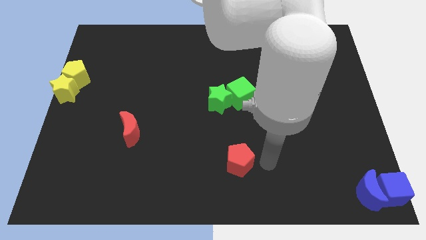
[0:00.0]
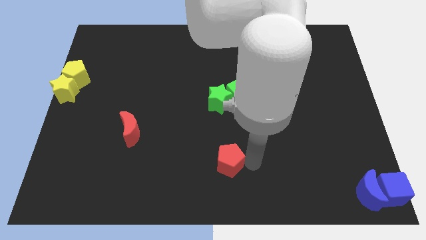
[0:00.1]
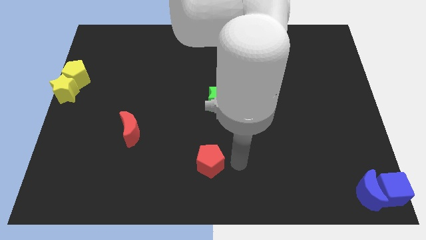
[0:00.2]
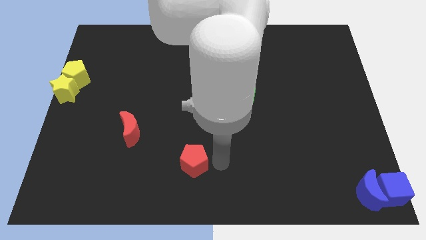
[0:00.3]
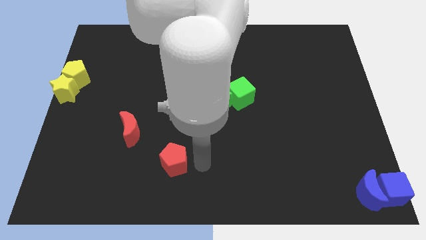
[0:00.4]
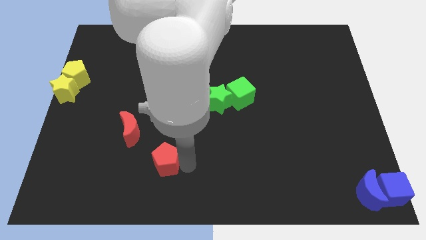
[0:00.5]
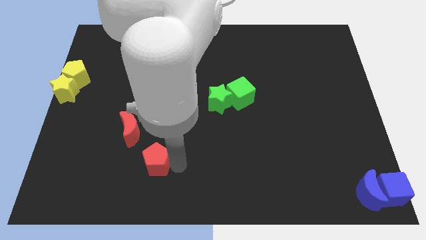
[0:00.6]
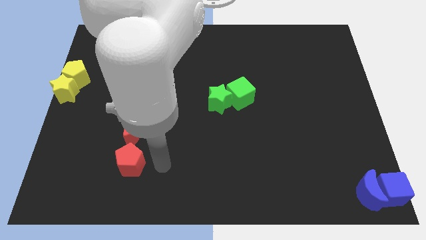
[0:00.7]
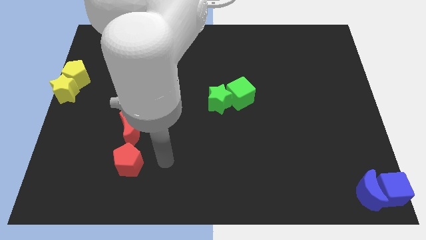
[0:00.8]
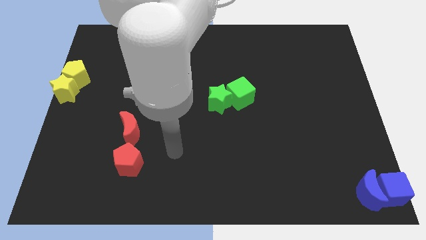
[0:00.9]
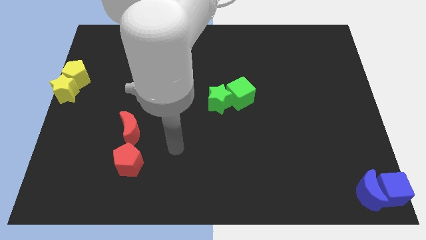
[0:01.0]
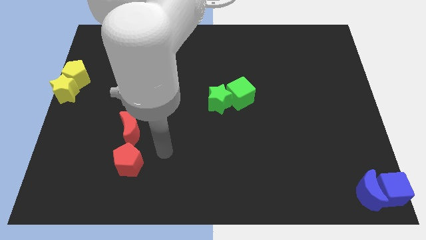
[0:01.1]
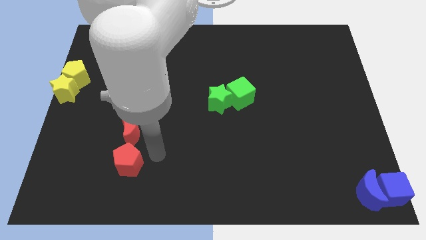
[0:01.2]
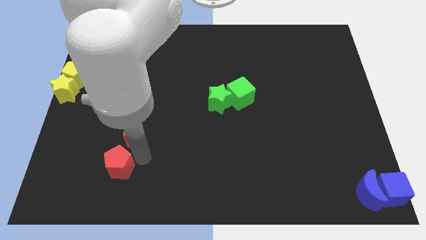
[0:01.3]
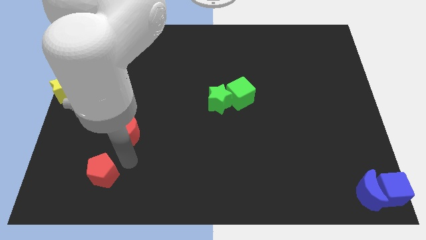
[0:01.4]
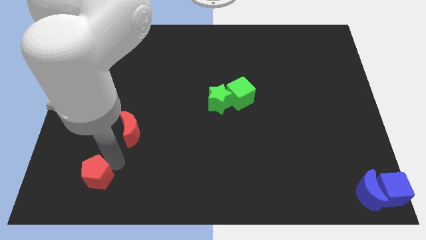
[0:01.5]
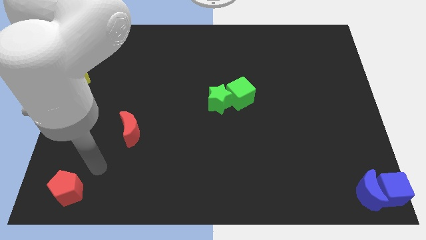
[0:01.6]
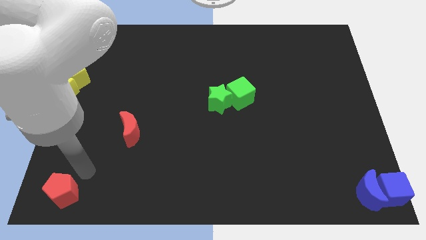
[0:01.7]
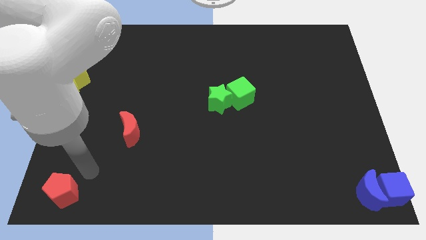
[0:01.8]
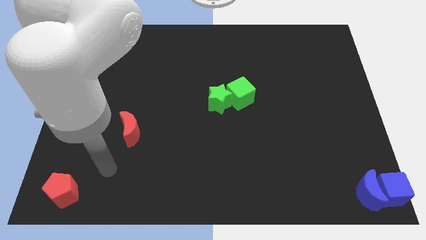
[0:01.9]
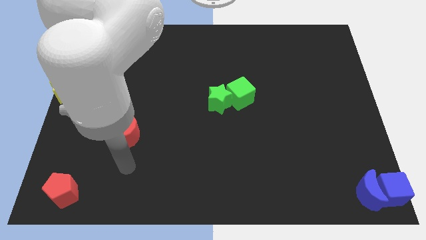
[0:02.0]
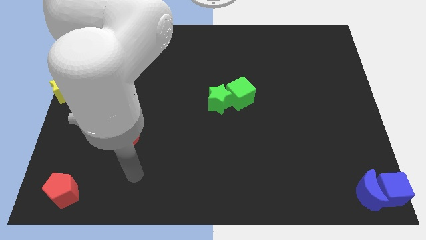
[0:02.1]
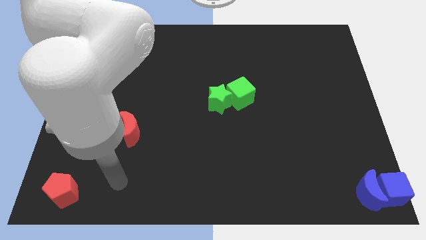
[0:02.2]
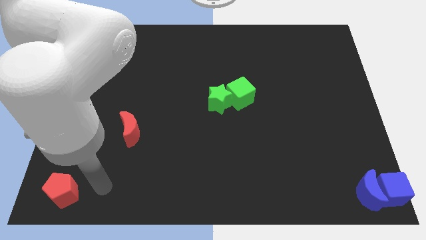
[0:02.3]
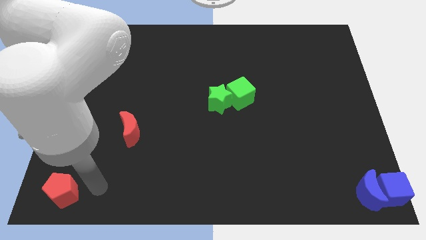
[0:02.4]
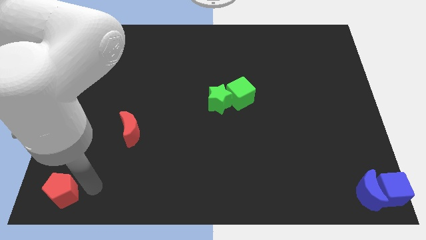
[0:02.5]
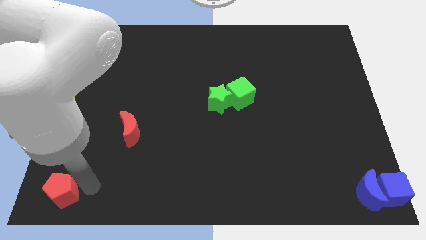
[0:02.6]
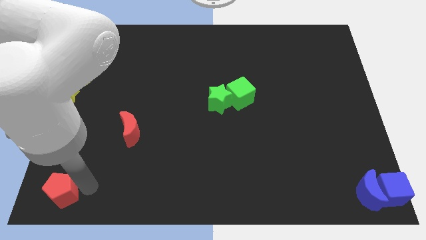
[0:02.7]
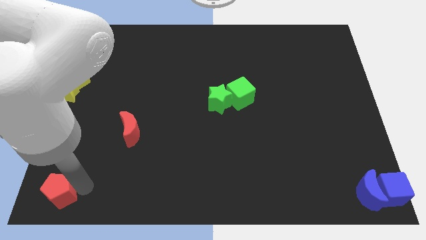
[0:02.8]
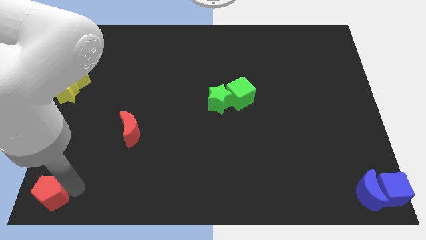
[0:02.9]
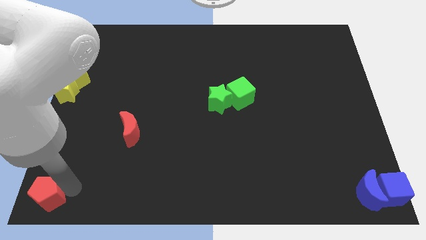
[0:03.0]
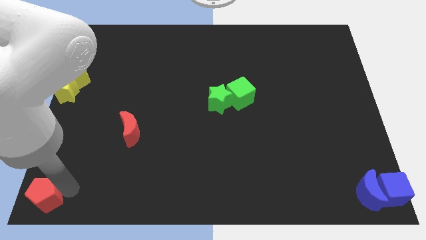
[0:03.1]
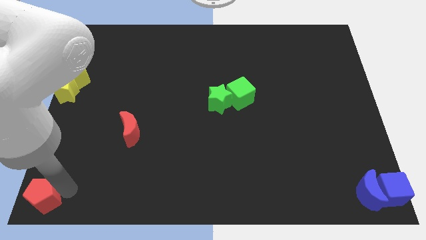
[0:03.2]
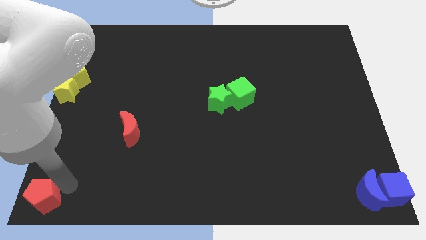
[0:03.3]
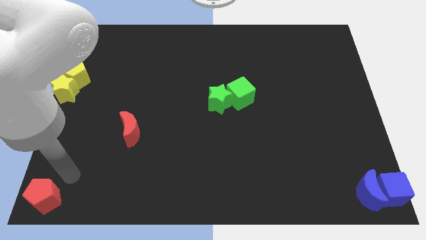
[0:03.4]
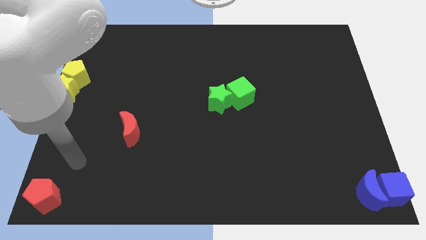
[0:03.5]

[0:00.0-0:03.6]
push the red pentagon to the bottom left side

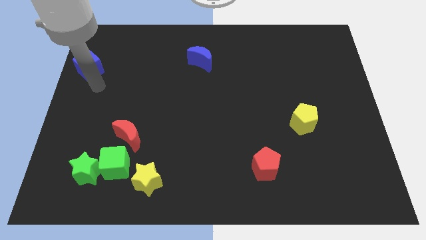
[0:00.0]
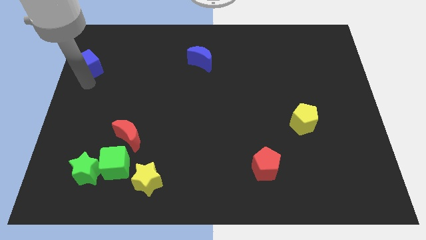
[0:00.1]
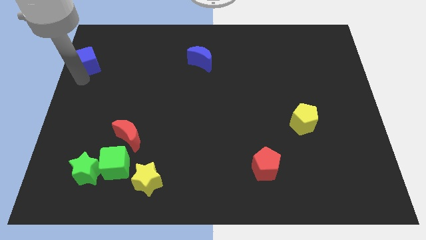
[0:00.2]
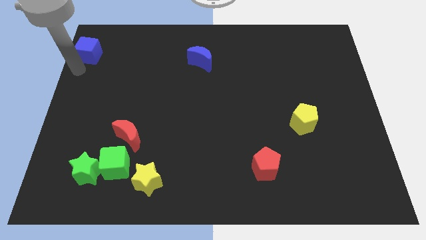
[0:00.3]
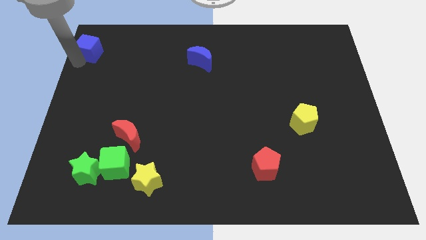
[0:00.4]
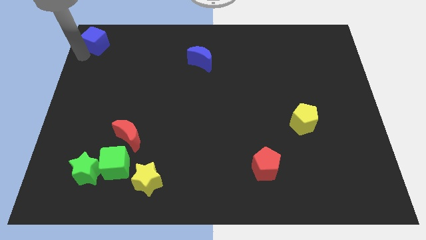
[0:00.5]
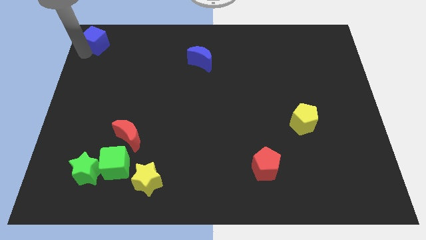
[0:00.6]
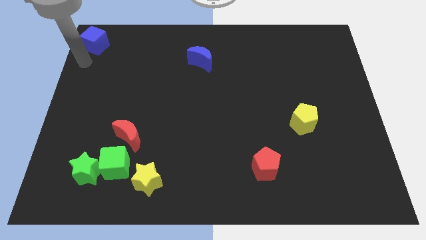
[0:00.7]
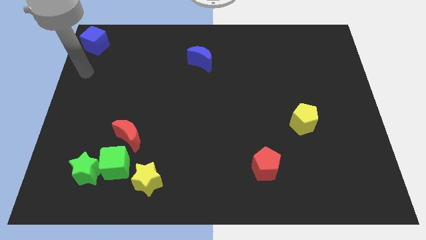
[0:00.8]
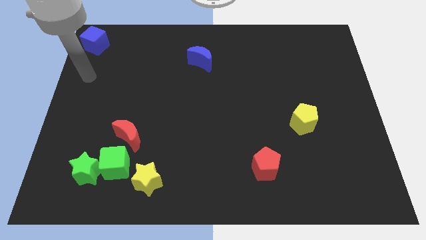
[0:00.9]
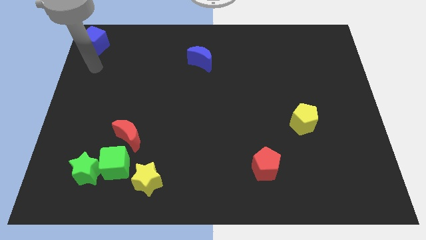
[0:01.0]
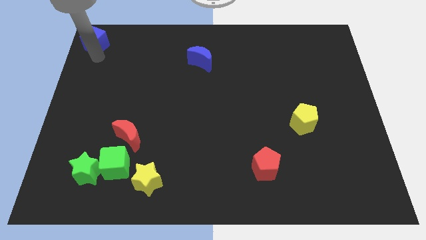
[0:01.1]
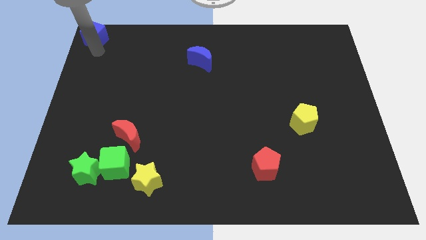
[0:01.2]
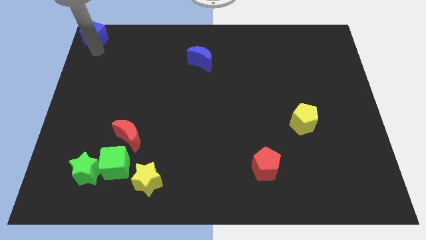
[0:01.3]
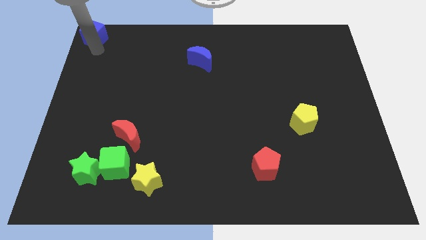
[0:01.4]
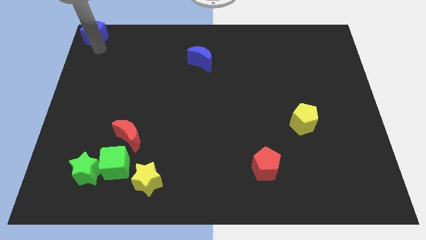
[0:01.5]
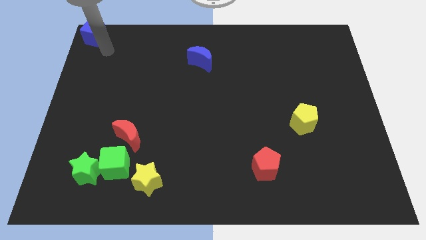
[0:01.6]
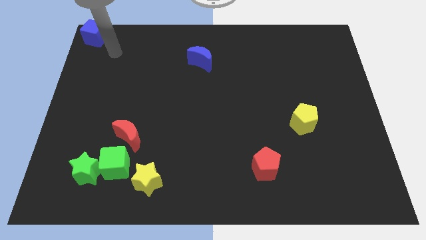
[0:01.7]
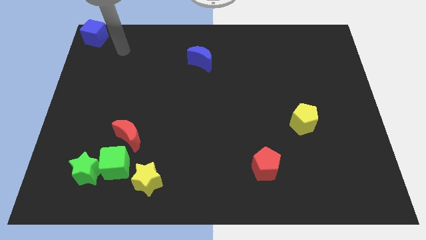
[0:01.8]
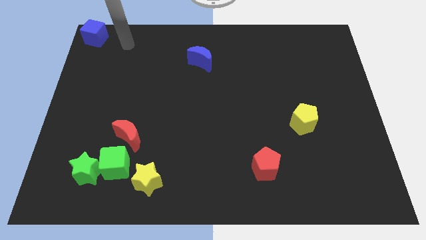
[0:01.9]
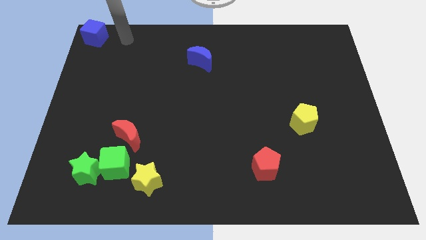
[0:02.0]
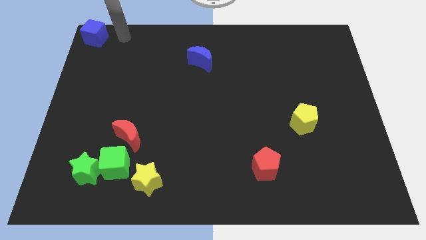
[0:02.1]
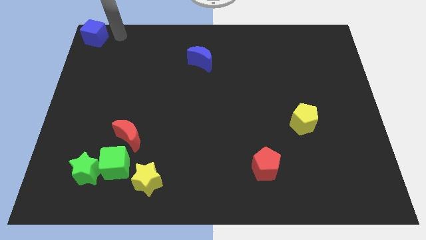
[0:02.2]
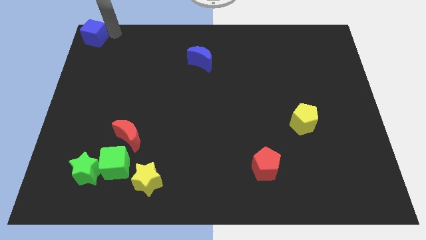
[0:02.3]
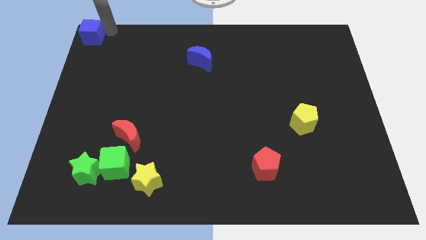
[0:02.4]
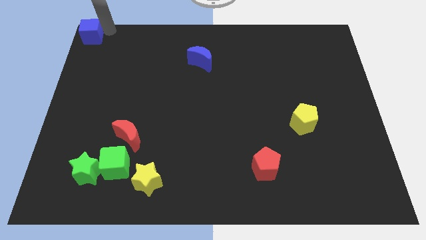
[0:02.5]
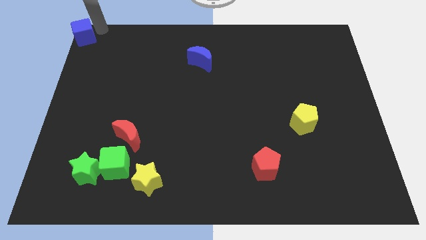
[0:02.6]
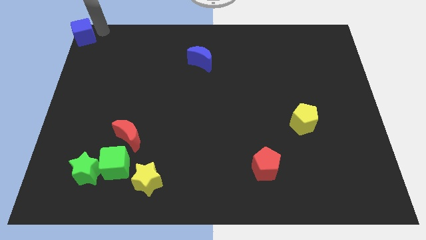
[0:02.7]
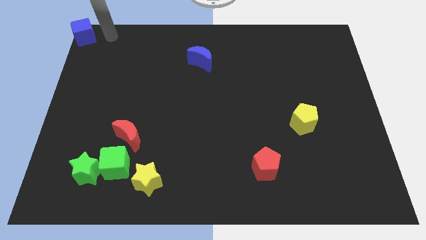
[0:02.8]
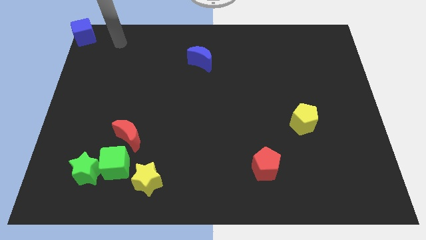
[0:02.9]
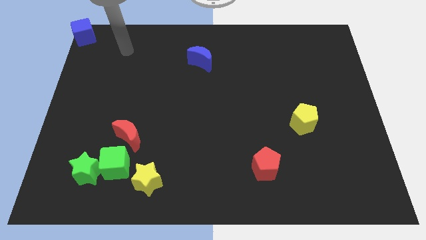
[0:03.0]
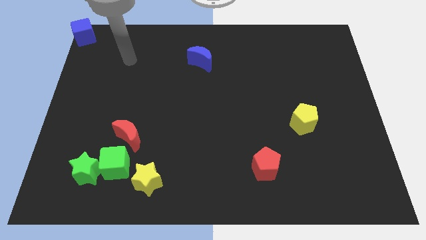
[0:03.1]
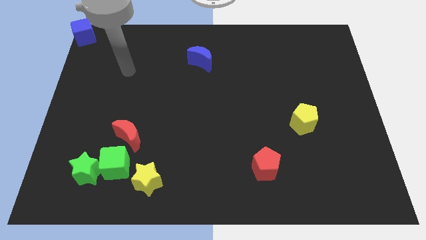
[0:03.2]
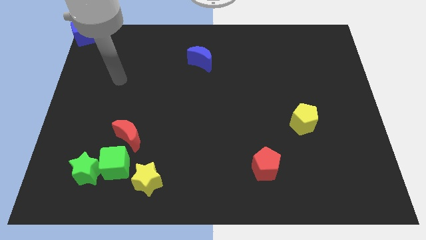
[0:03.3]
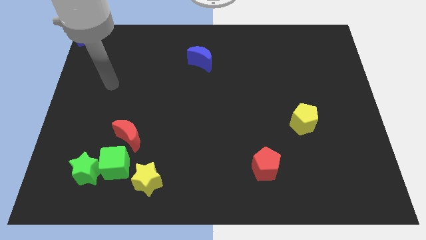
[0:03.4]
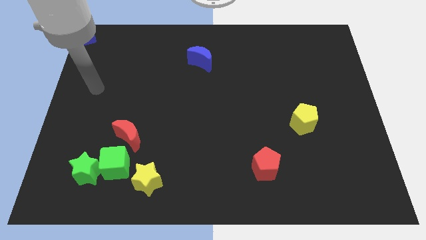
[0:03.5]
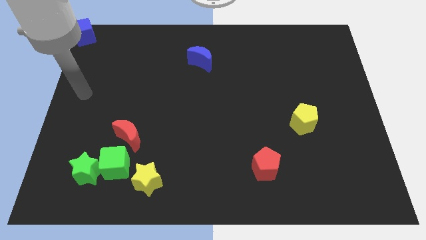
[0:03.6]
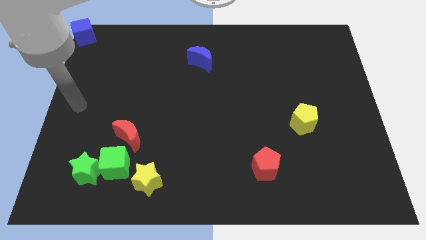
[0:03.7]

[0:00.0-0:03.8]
move the blue cube to the top left corner of the board

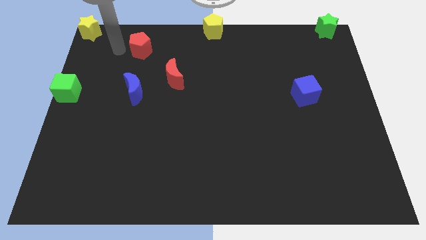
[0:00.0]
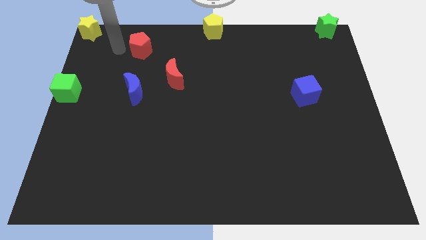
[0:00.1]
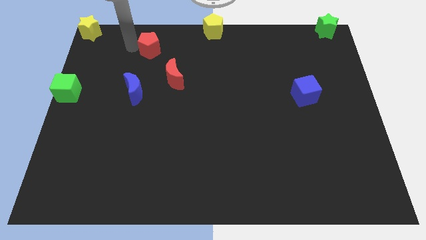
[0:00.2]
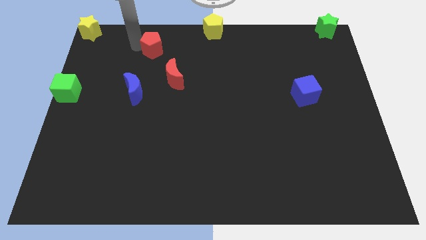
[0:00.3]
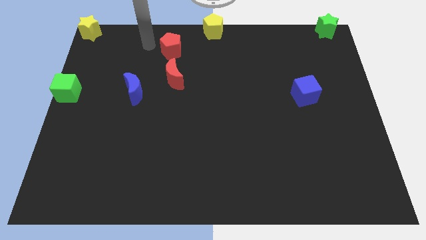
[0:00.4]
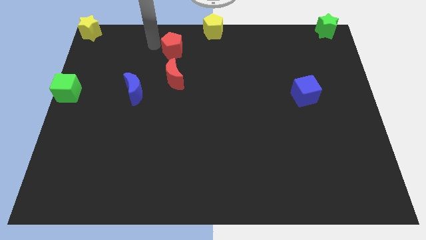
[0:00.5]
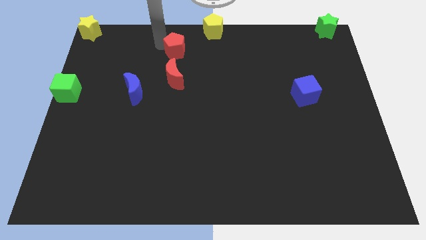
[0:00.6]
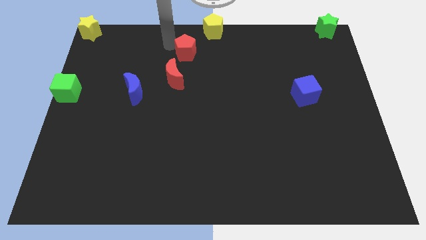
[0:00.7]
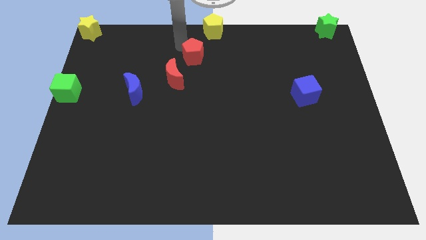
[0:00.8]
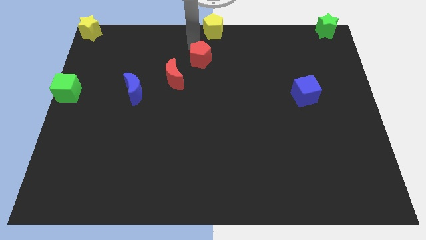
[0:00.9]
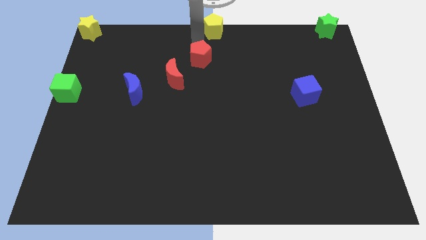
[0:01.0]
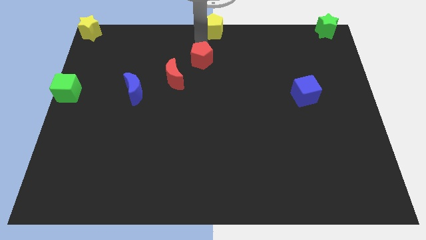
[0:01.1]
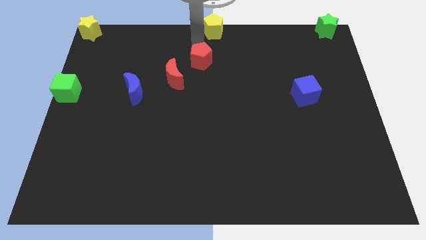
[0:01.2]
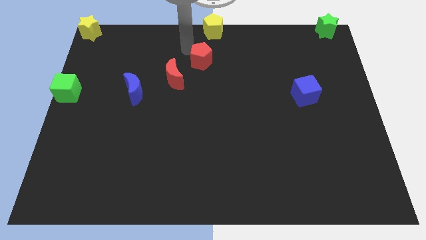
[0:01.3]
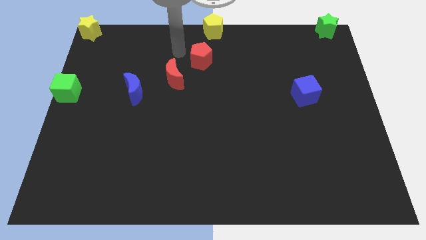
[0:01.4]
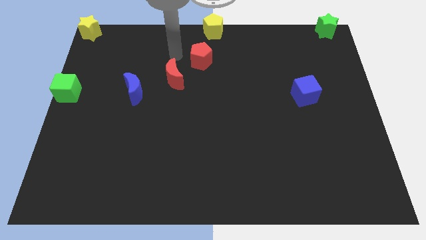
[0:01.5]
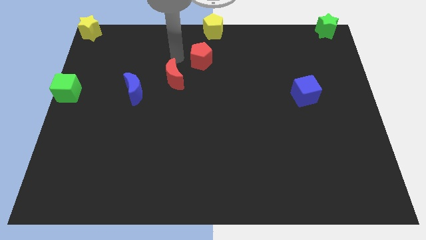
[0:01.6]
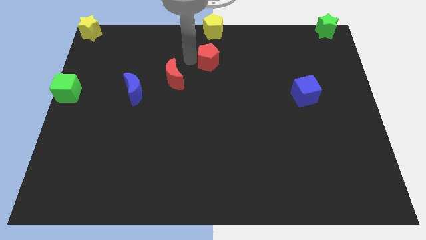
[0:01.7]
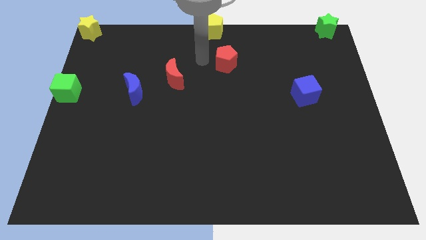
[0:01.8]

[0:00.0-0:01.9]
place the red pentagon diagonally top right to red moon
